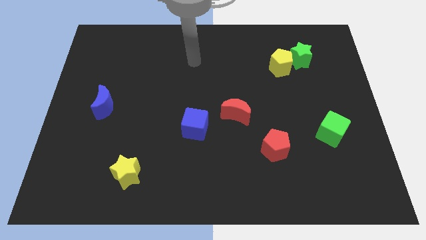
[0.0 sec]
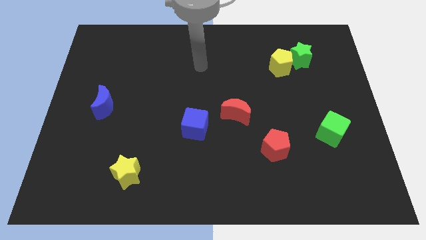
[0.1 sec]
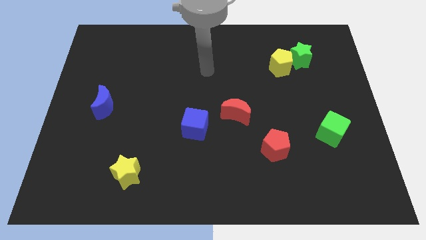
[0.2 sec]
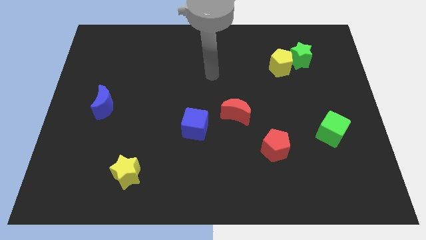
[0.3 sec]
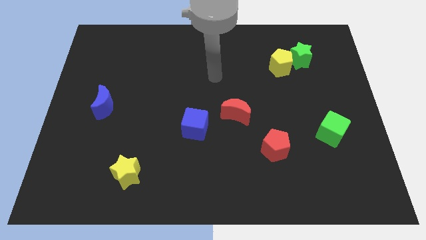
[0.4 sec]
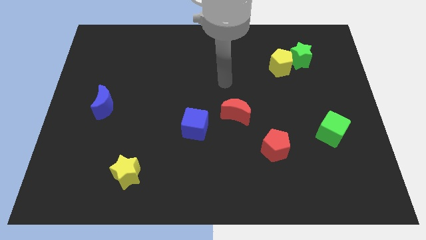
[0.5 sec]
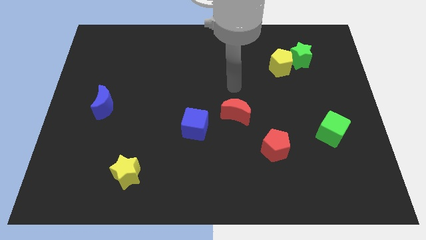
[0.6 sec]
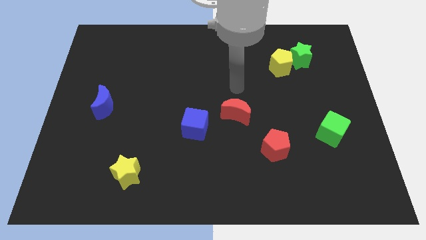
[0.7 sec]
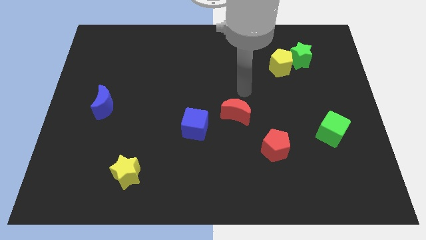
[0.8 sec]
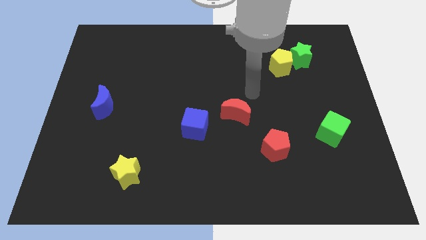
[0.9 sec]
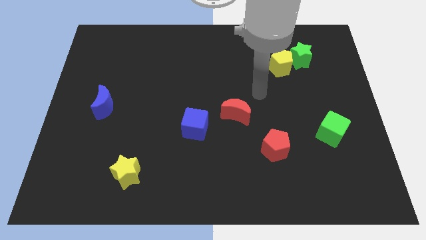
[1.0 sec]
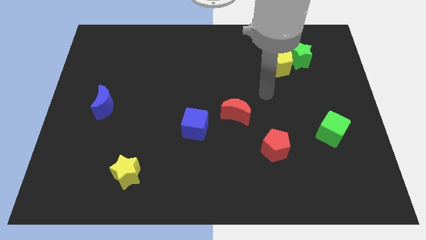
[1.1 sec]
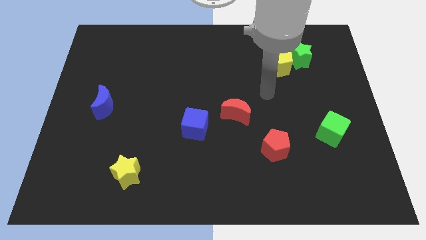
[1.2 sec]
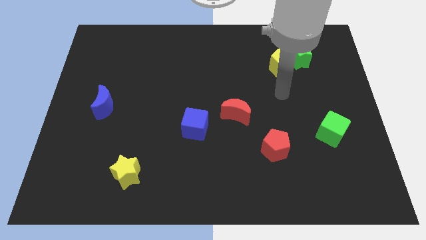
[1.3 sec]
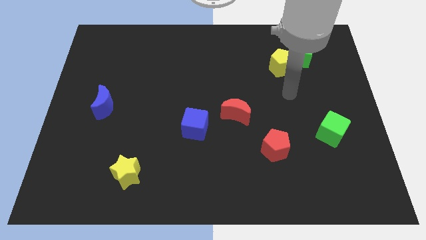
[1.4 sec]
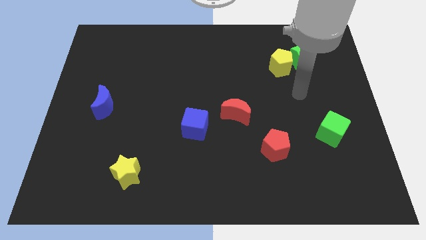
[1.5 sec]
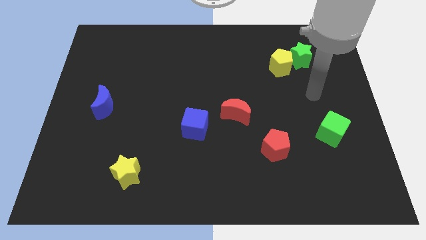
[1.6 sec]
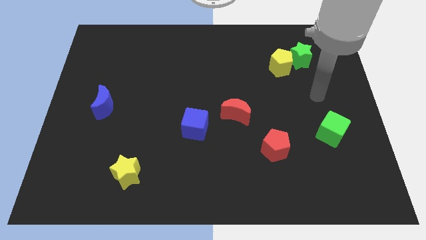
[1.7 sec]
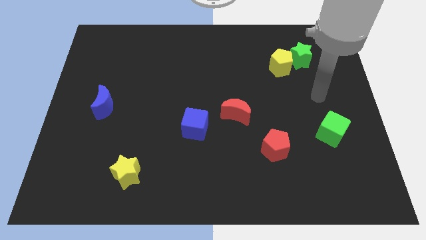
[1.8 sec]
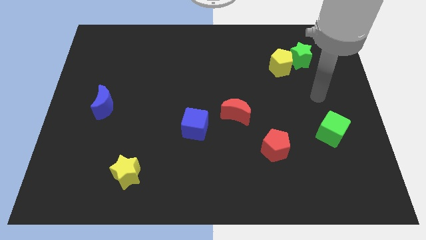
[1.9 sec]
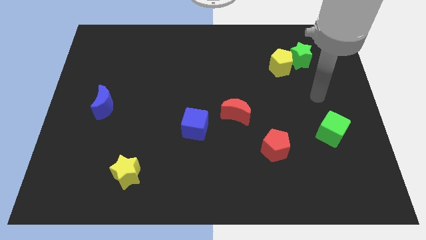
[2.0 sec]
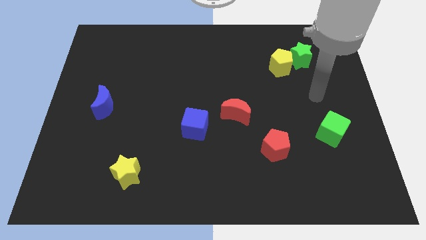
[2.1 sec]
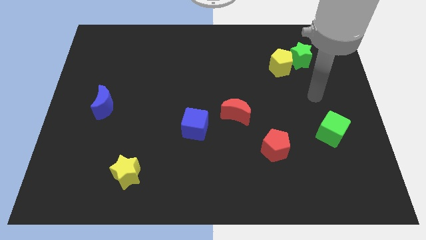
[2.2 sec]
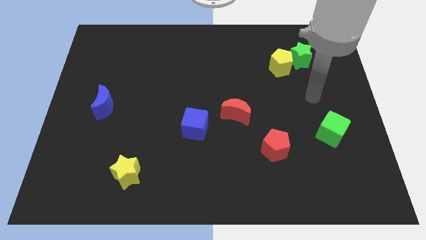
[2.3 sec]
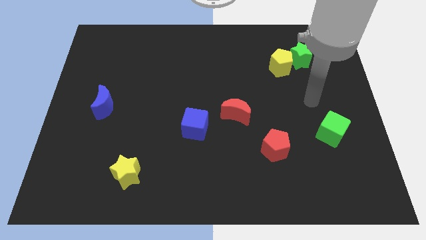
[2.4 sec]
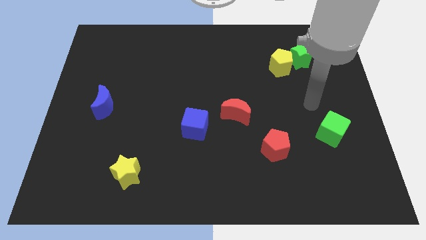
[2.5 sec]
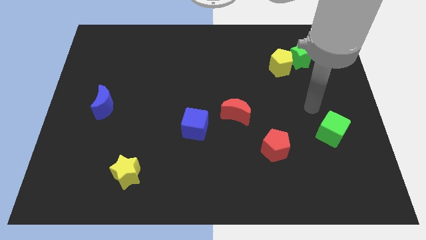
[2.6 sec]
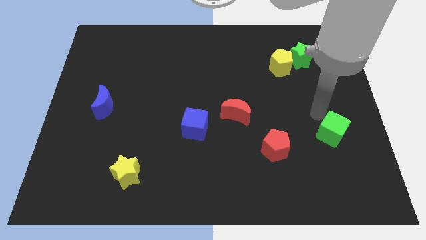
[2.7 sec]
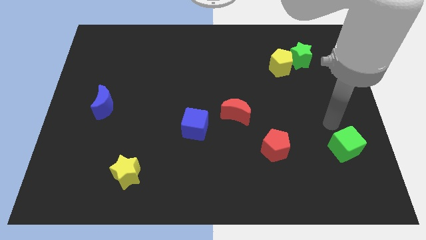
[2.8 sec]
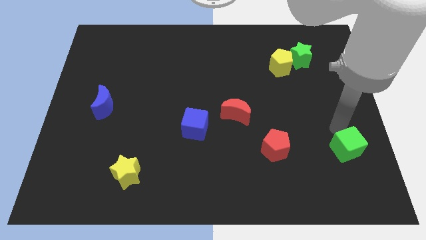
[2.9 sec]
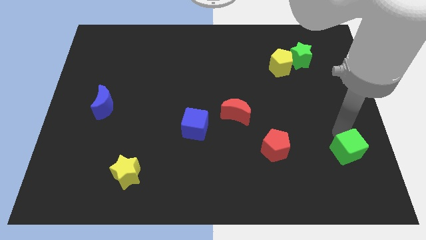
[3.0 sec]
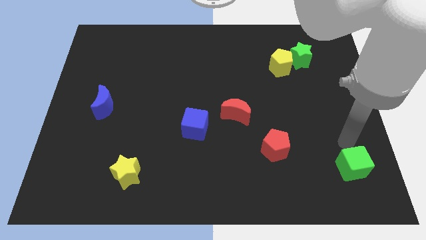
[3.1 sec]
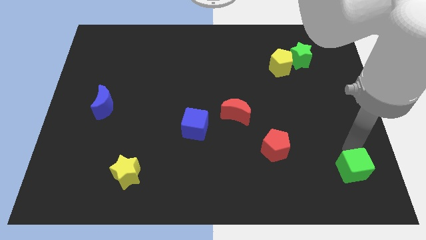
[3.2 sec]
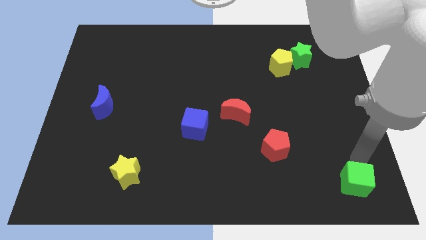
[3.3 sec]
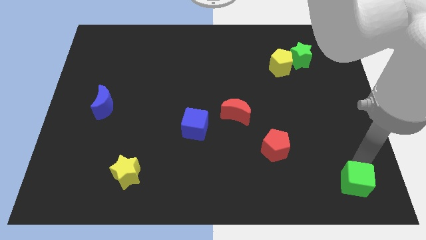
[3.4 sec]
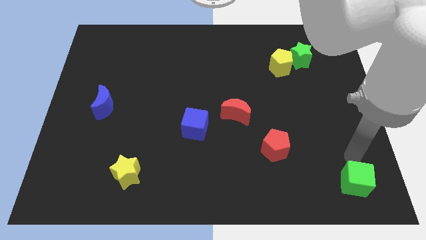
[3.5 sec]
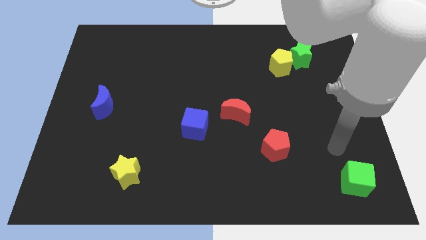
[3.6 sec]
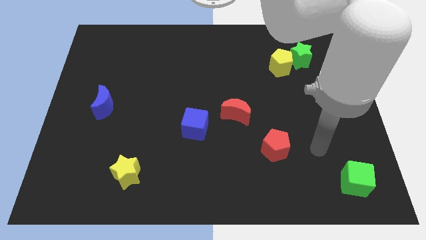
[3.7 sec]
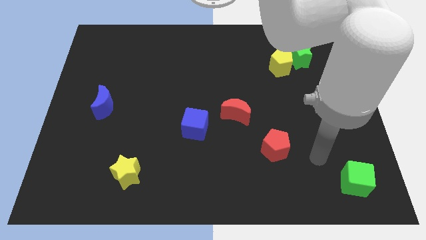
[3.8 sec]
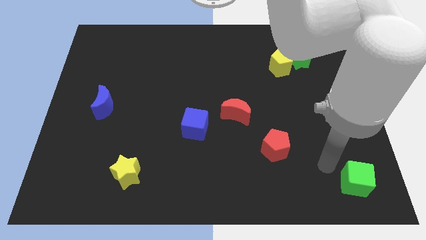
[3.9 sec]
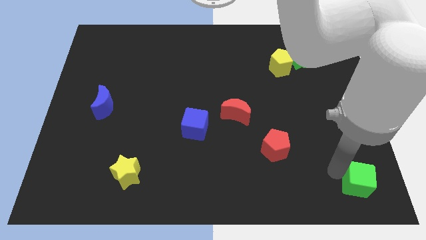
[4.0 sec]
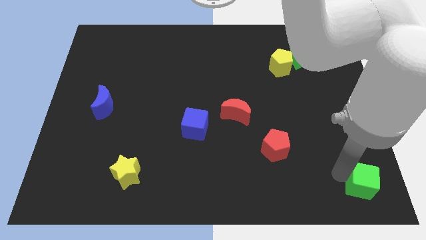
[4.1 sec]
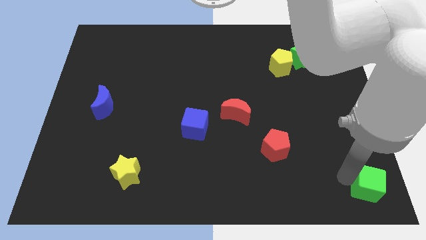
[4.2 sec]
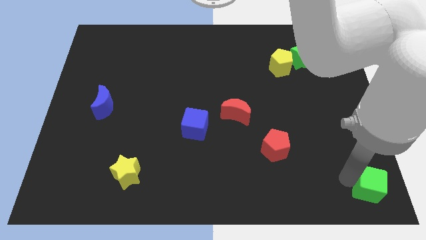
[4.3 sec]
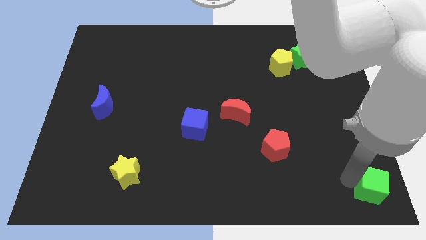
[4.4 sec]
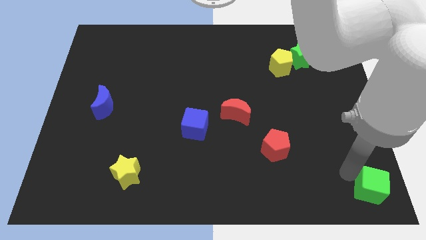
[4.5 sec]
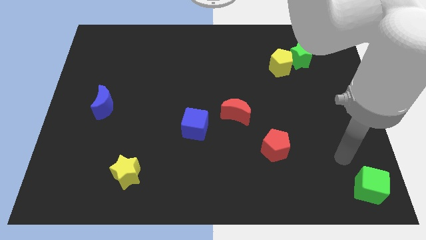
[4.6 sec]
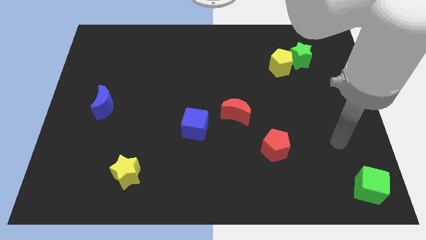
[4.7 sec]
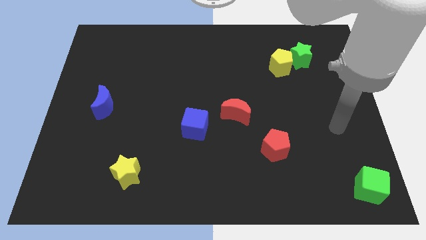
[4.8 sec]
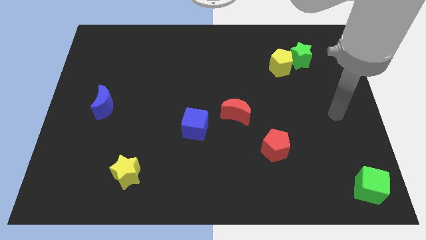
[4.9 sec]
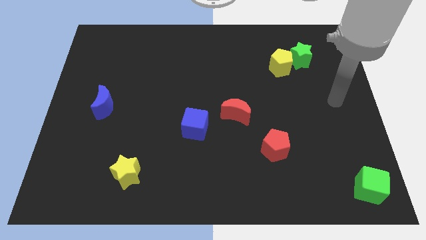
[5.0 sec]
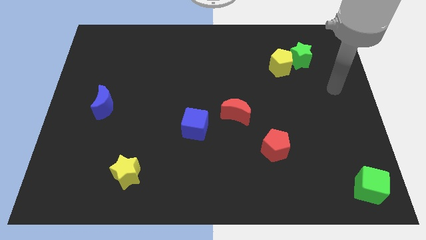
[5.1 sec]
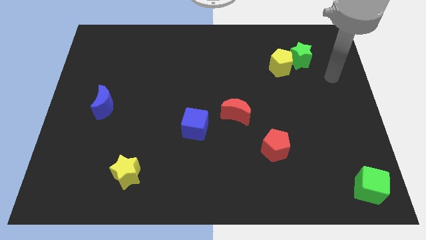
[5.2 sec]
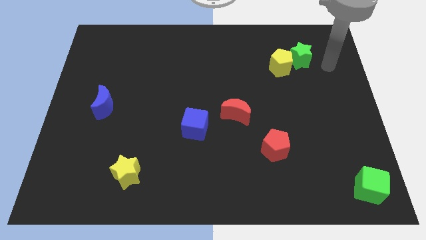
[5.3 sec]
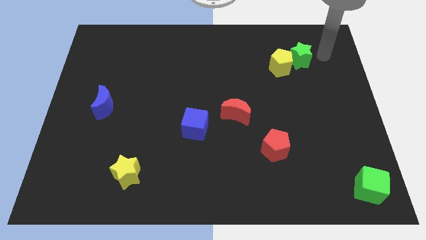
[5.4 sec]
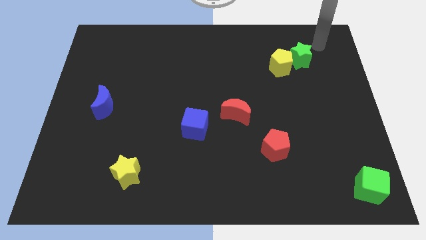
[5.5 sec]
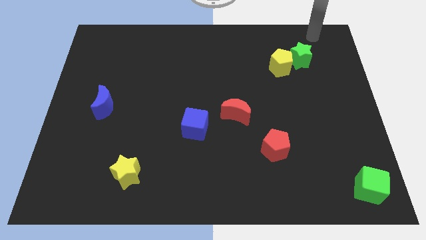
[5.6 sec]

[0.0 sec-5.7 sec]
place the green cube near bottom right corner

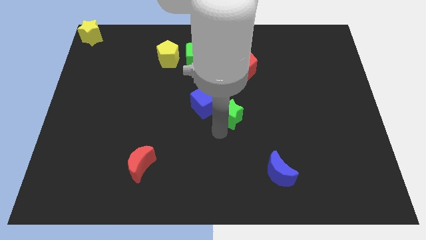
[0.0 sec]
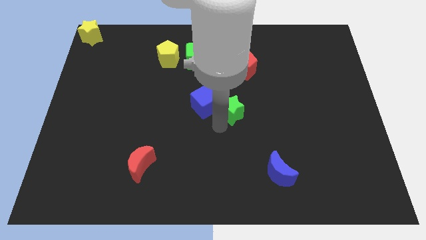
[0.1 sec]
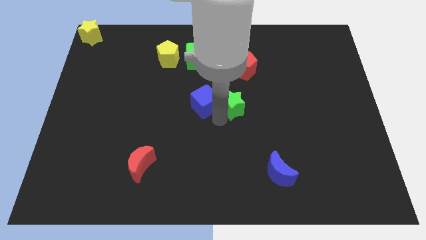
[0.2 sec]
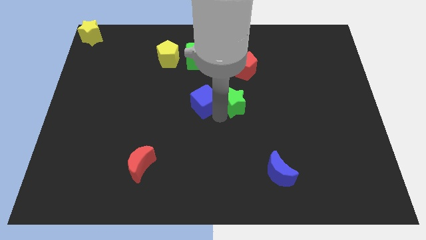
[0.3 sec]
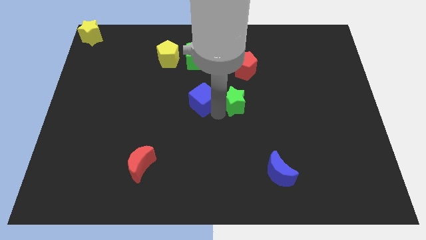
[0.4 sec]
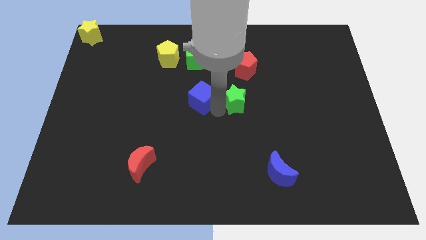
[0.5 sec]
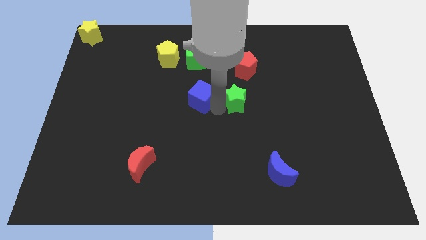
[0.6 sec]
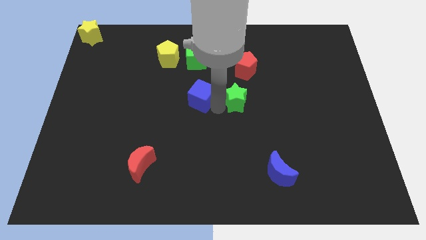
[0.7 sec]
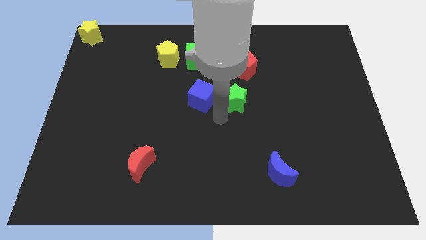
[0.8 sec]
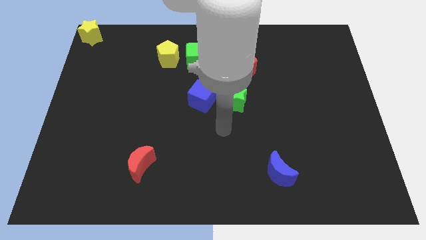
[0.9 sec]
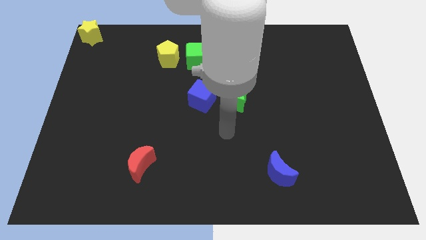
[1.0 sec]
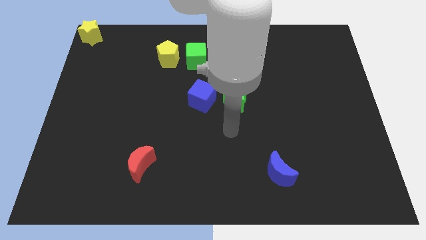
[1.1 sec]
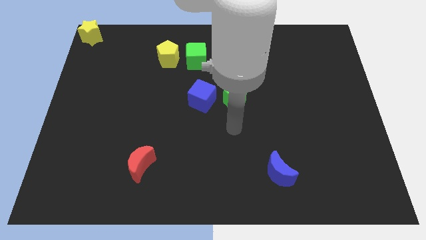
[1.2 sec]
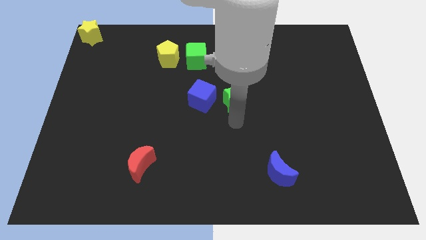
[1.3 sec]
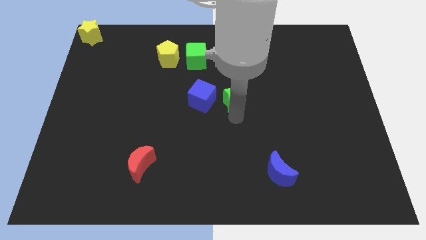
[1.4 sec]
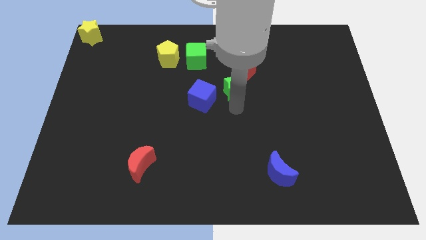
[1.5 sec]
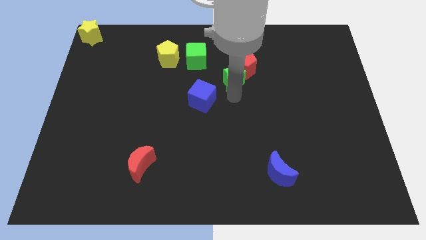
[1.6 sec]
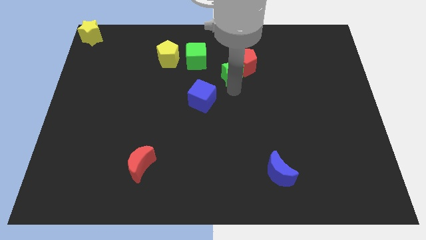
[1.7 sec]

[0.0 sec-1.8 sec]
slightly push the green star into the red pentagon

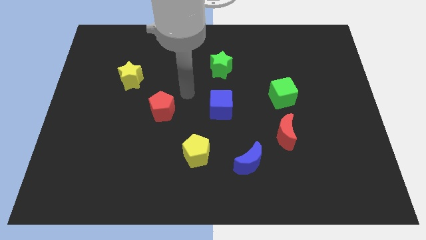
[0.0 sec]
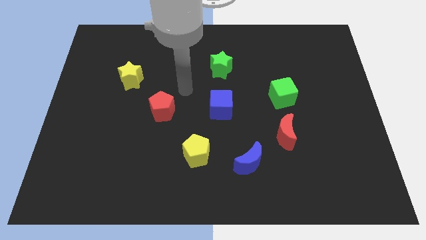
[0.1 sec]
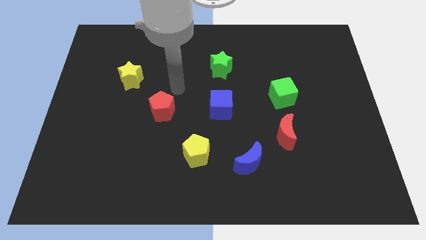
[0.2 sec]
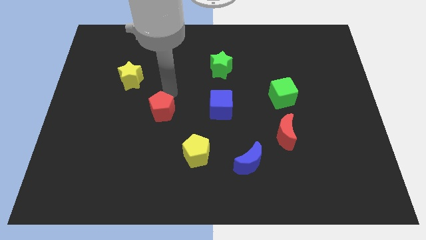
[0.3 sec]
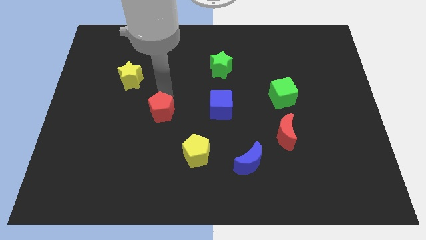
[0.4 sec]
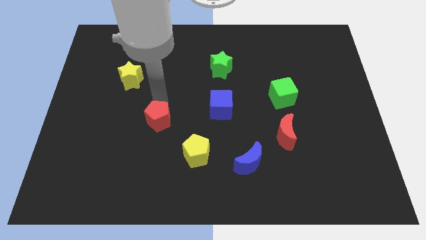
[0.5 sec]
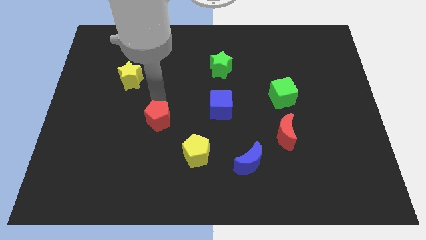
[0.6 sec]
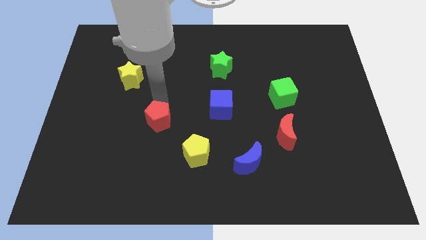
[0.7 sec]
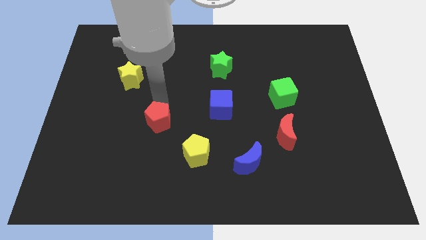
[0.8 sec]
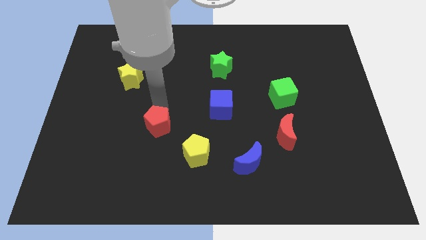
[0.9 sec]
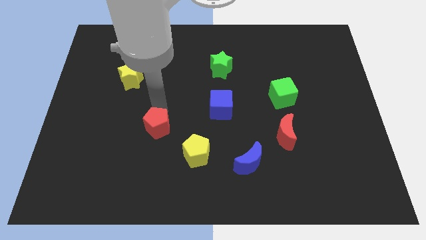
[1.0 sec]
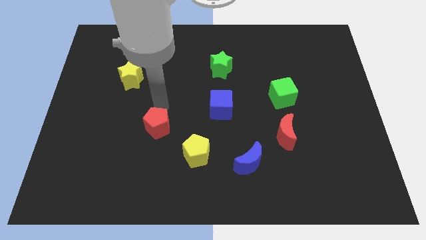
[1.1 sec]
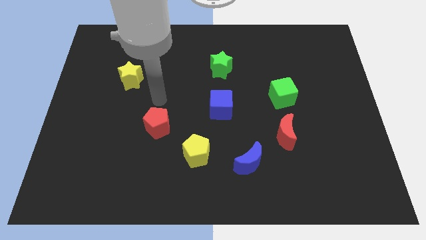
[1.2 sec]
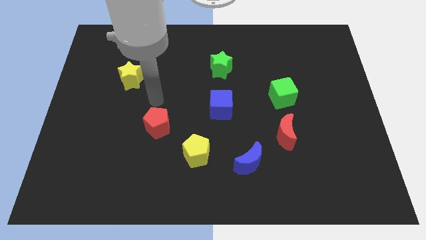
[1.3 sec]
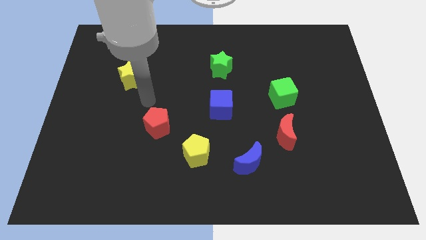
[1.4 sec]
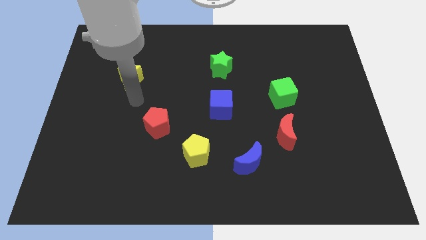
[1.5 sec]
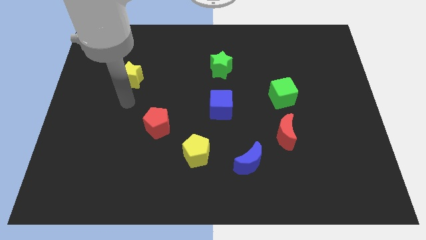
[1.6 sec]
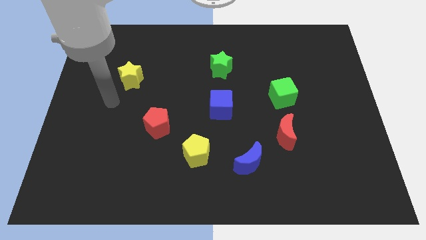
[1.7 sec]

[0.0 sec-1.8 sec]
push the red pentagon between yellow star and yellow pentagon
